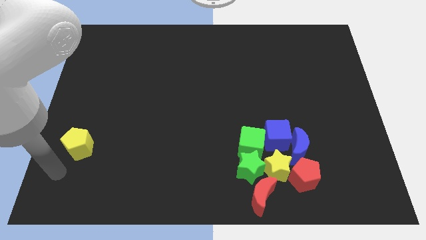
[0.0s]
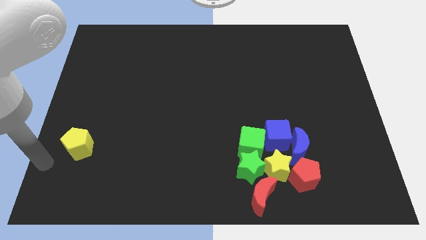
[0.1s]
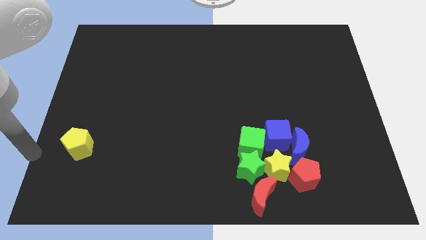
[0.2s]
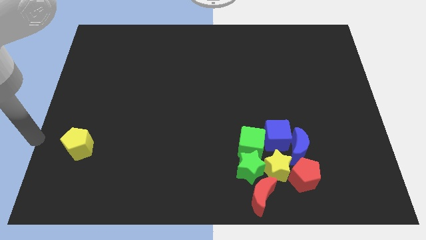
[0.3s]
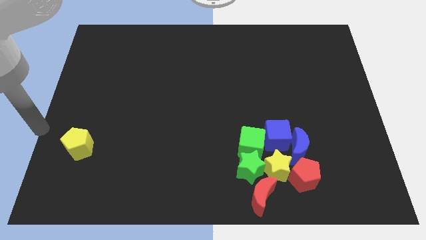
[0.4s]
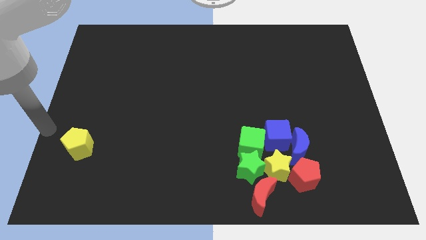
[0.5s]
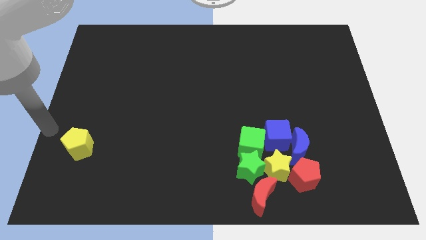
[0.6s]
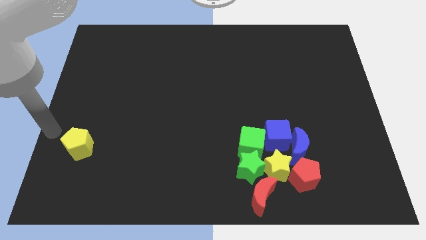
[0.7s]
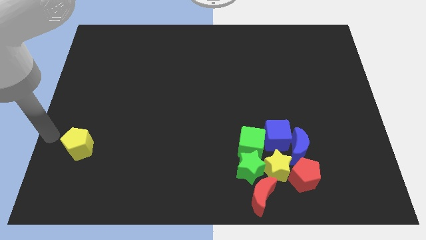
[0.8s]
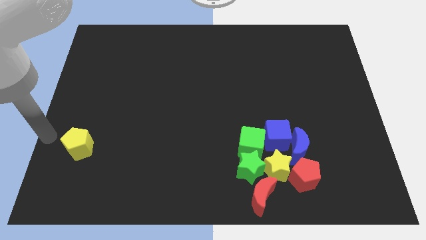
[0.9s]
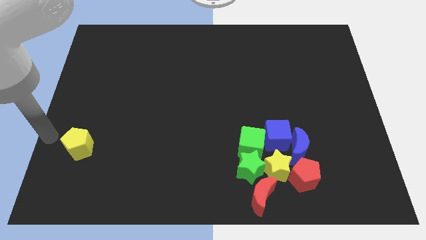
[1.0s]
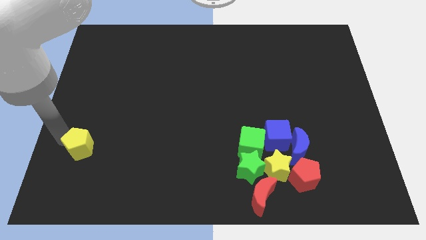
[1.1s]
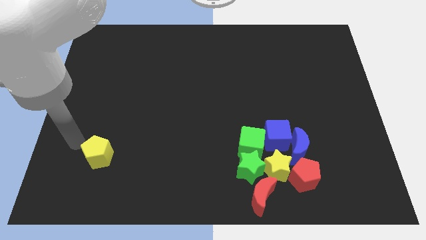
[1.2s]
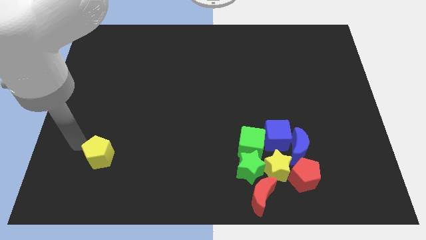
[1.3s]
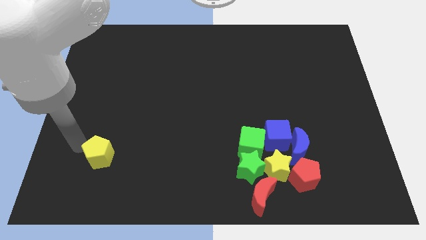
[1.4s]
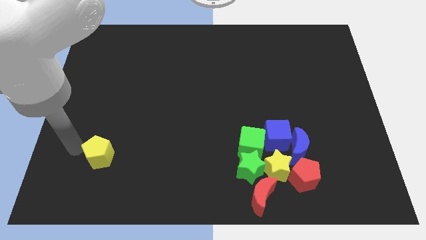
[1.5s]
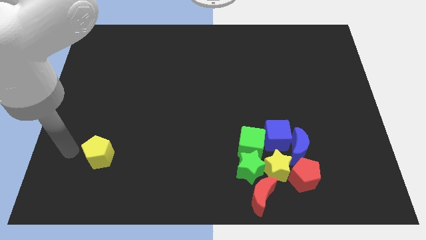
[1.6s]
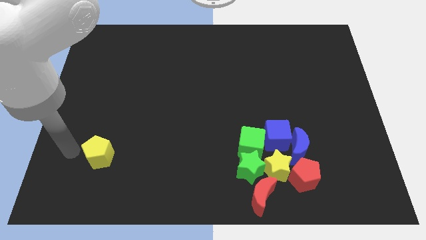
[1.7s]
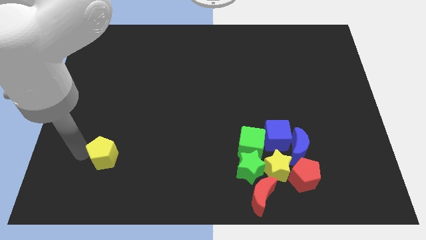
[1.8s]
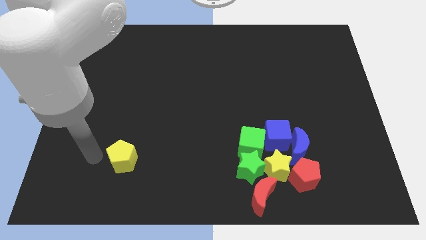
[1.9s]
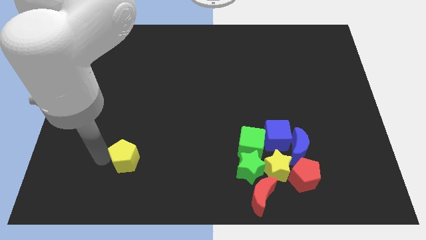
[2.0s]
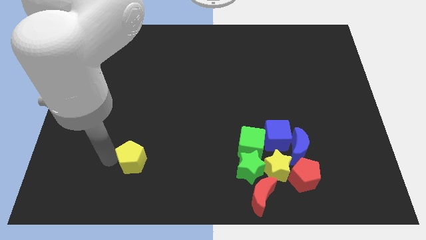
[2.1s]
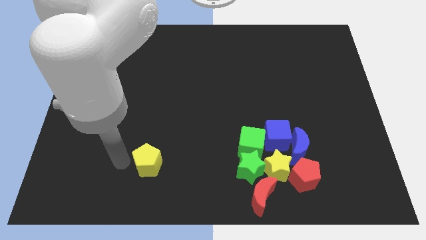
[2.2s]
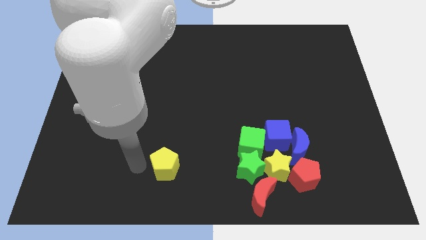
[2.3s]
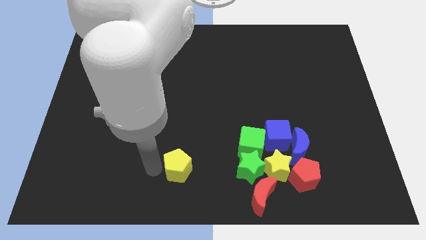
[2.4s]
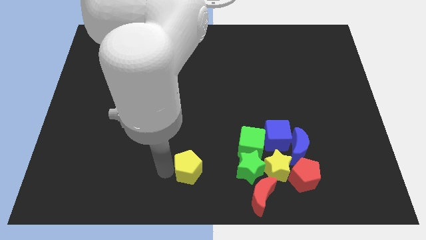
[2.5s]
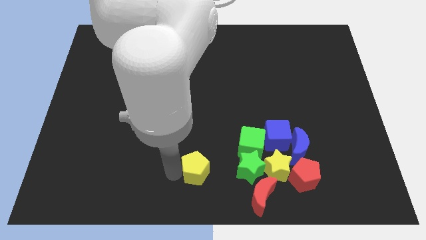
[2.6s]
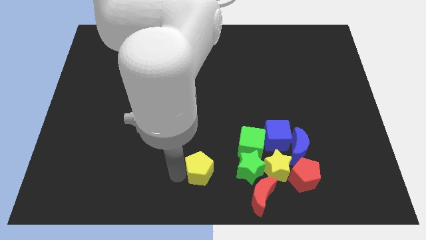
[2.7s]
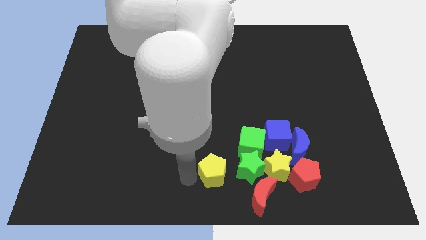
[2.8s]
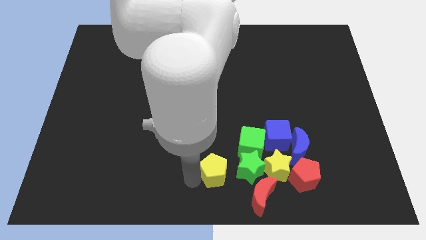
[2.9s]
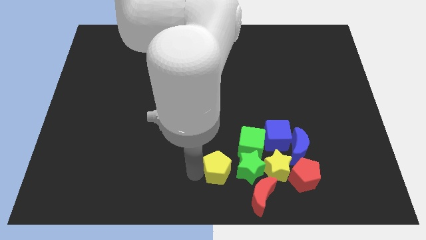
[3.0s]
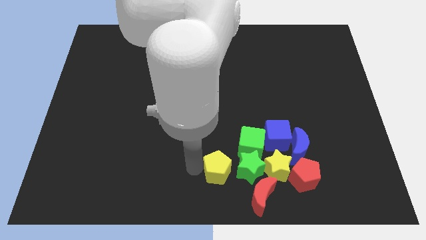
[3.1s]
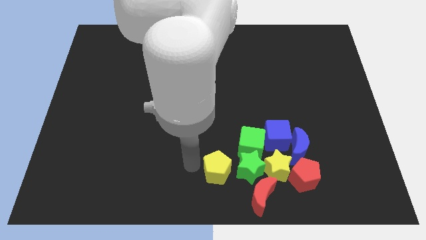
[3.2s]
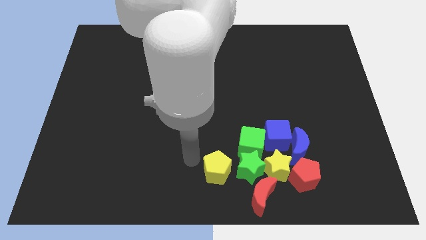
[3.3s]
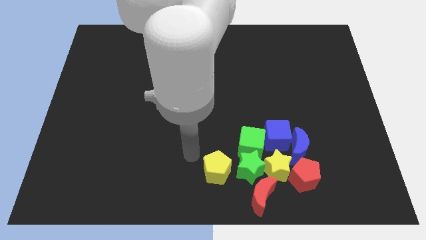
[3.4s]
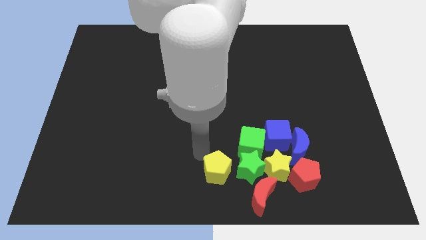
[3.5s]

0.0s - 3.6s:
place yellow pentagon in horizontal line of blocks

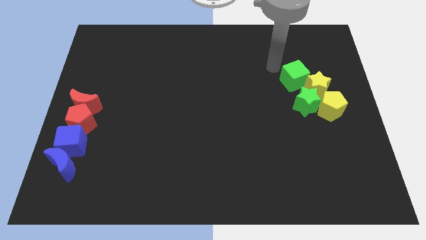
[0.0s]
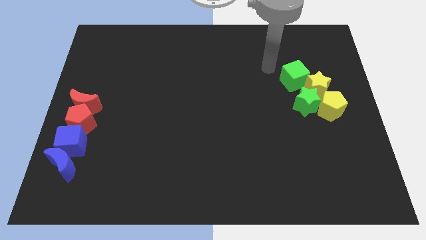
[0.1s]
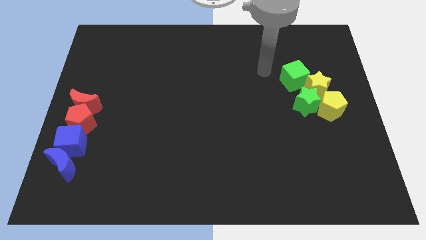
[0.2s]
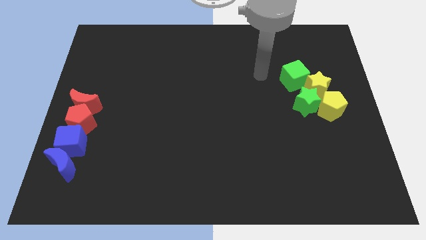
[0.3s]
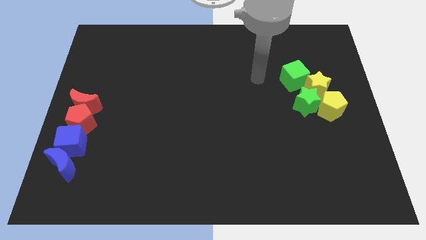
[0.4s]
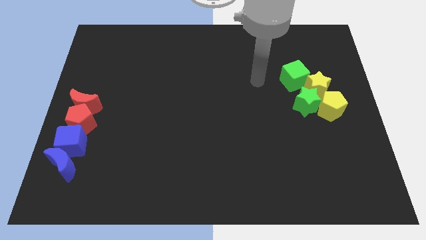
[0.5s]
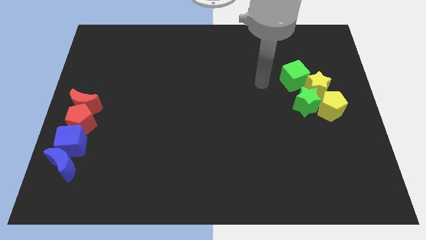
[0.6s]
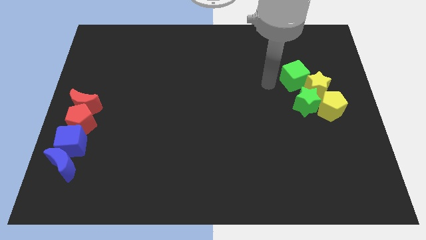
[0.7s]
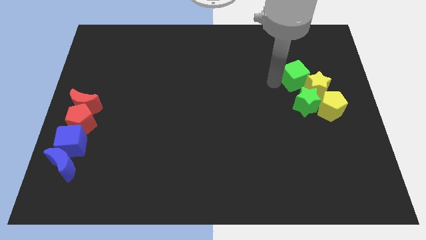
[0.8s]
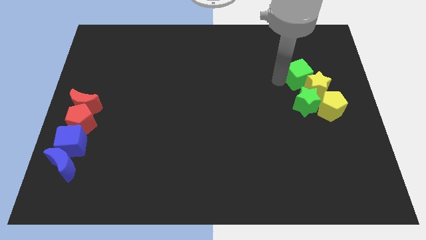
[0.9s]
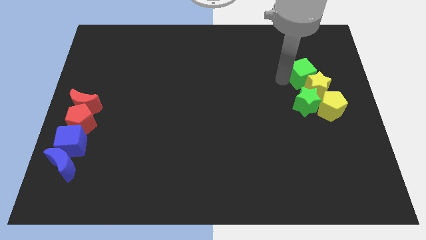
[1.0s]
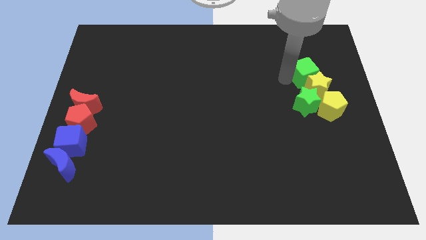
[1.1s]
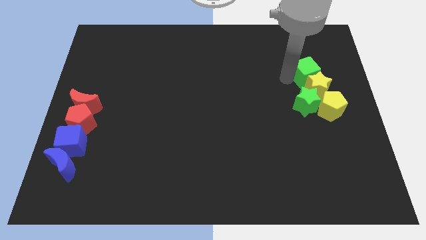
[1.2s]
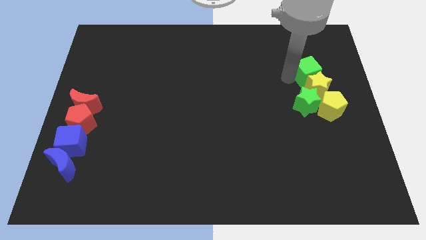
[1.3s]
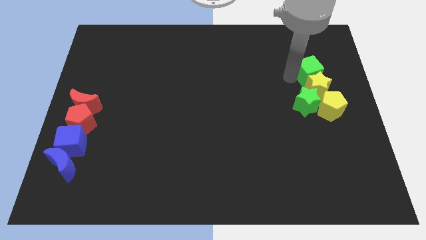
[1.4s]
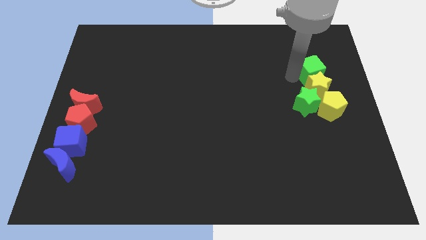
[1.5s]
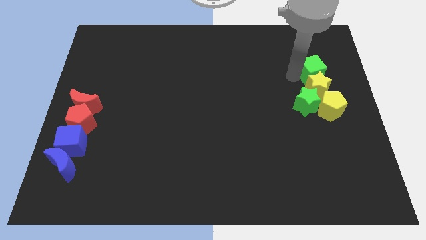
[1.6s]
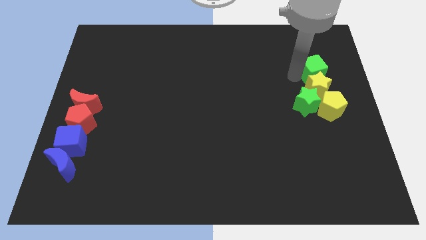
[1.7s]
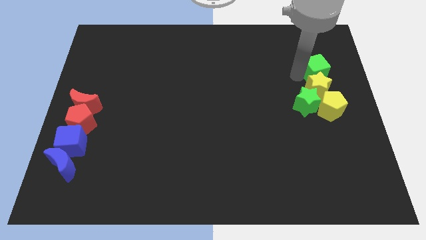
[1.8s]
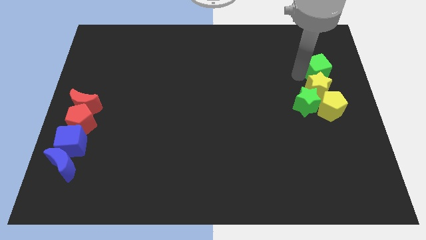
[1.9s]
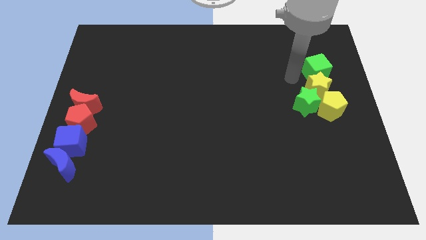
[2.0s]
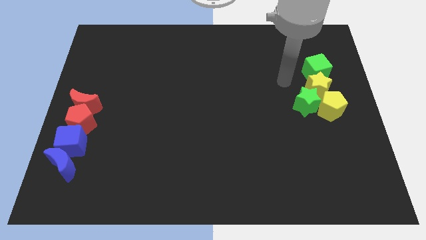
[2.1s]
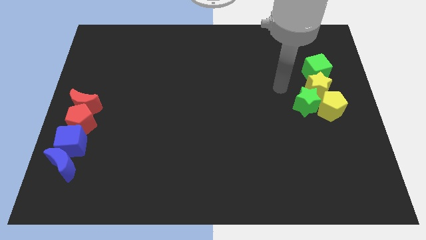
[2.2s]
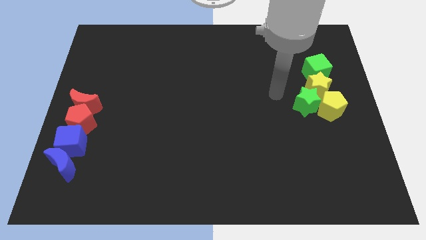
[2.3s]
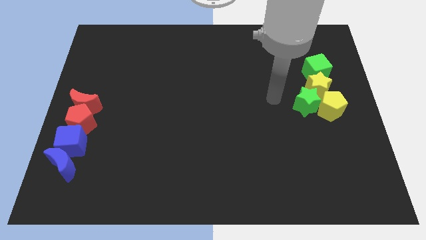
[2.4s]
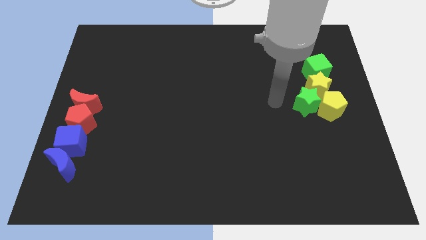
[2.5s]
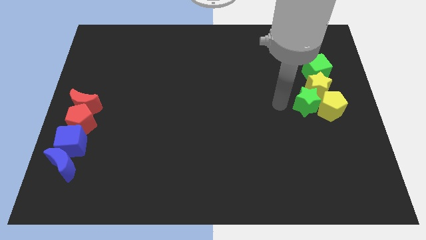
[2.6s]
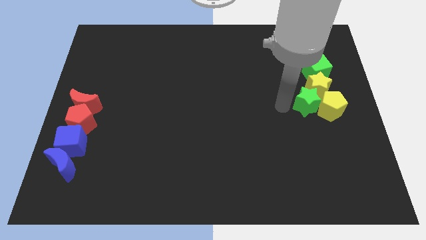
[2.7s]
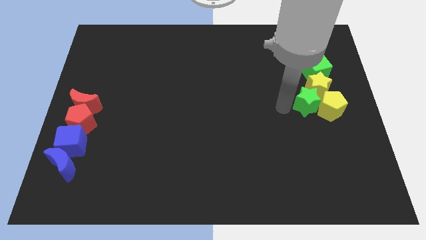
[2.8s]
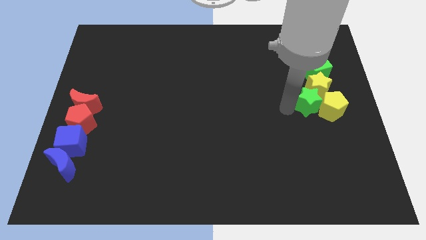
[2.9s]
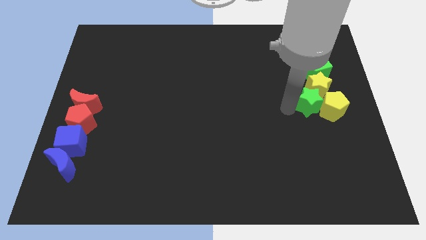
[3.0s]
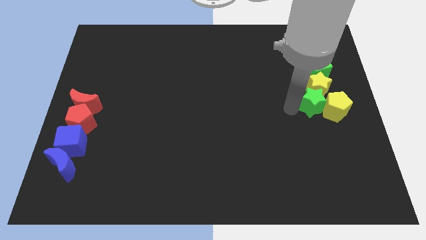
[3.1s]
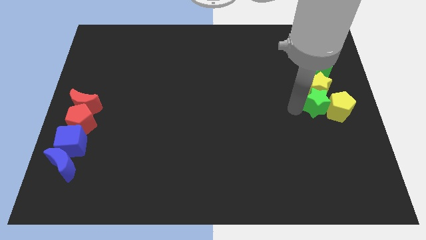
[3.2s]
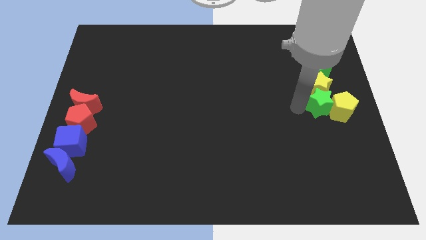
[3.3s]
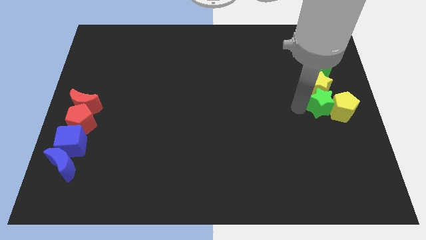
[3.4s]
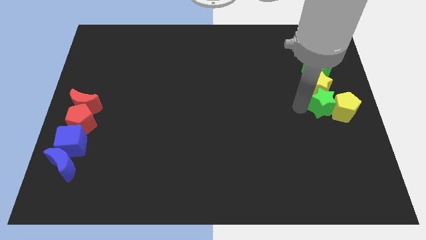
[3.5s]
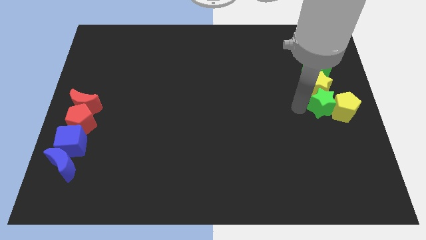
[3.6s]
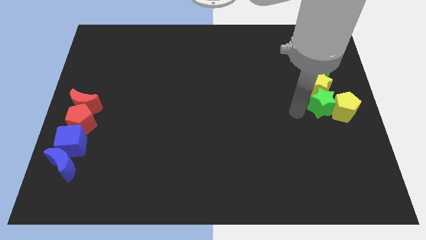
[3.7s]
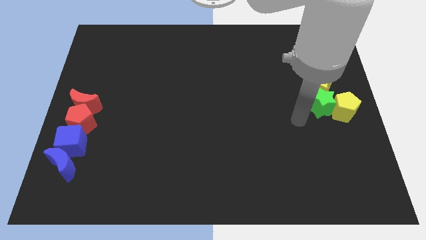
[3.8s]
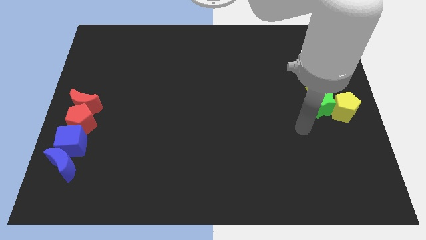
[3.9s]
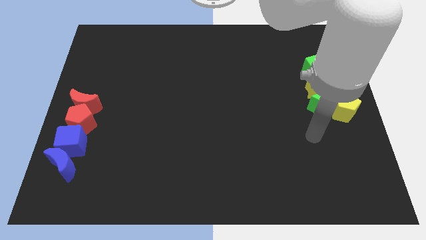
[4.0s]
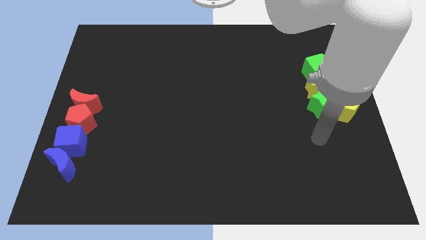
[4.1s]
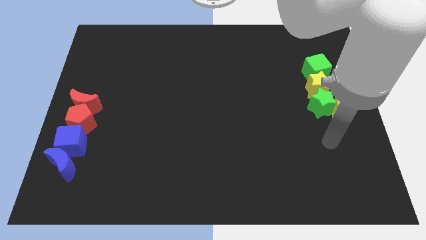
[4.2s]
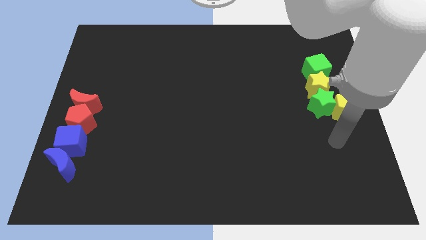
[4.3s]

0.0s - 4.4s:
make a vertical line with the green cube yellow star and green star

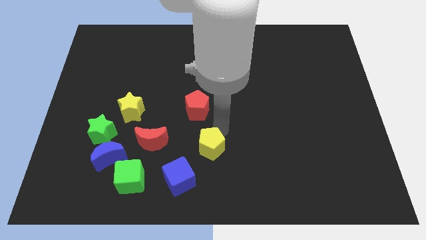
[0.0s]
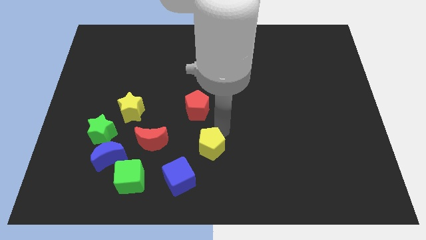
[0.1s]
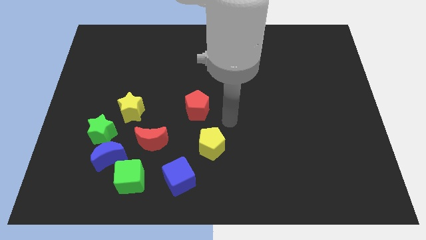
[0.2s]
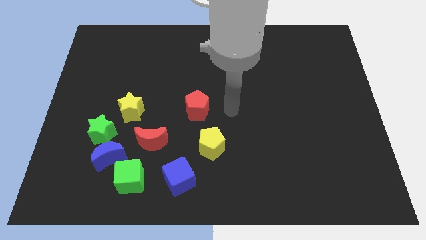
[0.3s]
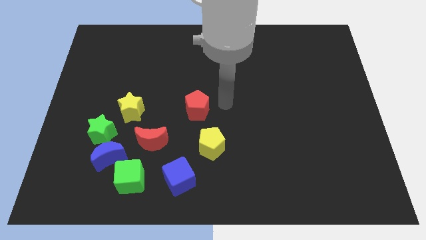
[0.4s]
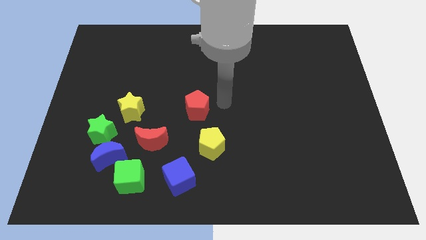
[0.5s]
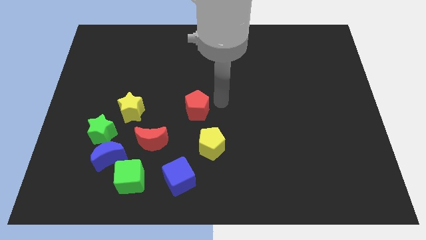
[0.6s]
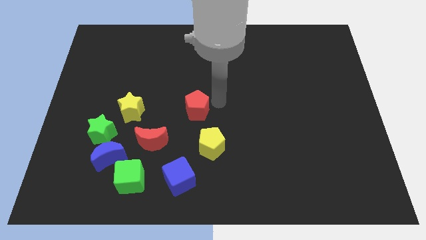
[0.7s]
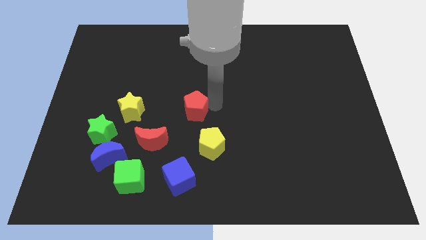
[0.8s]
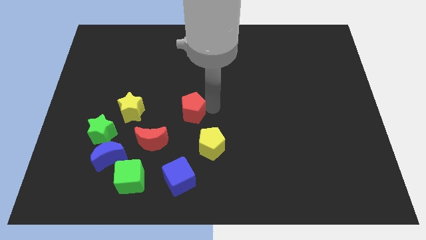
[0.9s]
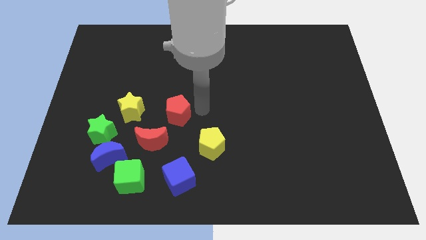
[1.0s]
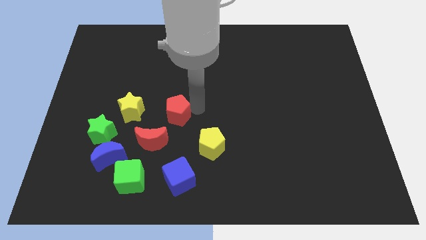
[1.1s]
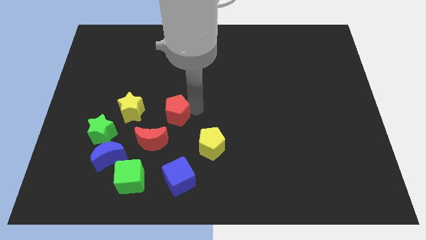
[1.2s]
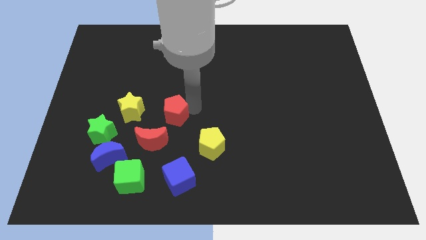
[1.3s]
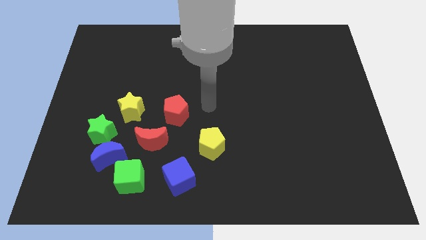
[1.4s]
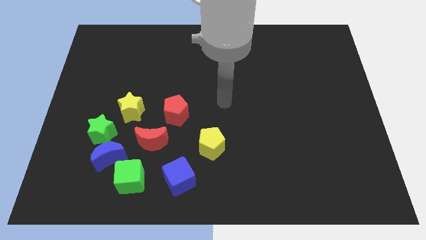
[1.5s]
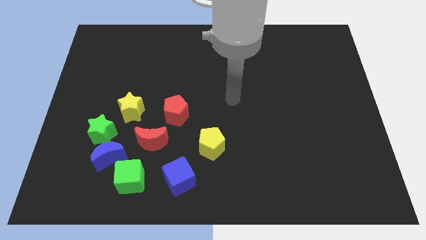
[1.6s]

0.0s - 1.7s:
place the red pentagon at the top right of the red moon
